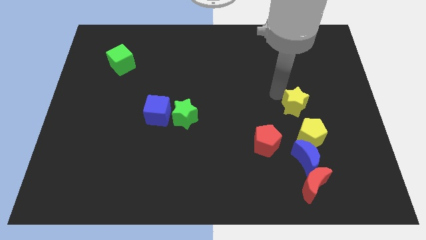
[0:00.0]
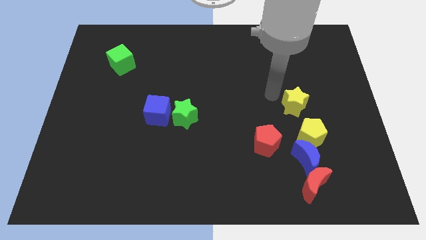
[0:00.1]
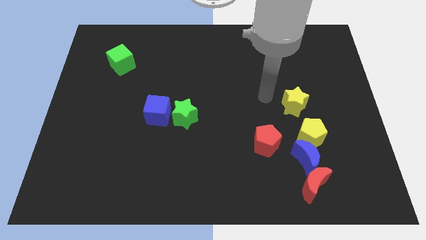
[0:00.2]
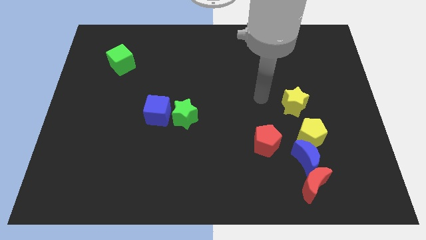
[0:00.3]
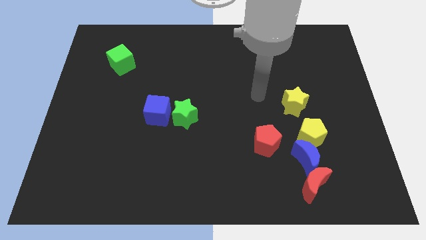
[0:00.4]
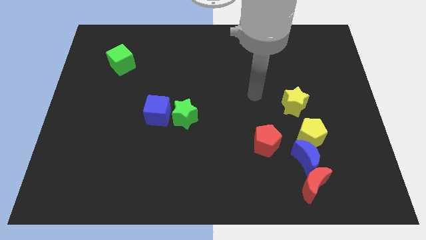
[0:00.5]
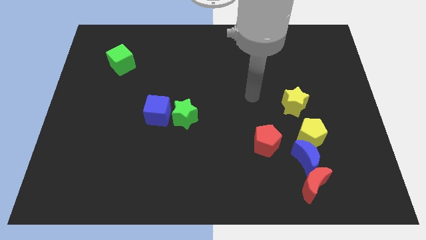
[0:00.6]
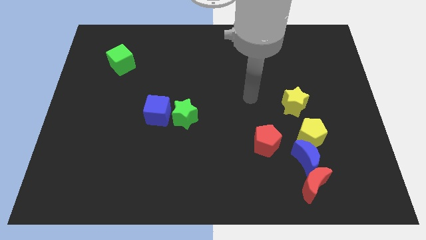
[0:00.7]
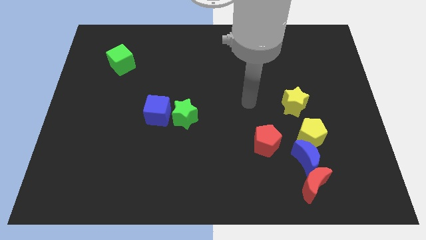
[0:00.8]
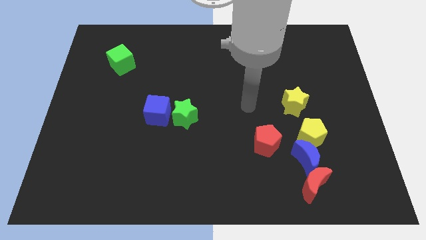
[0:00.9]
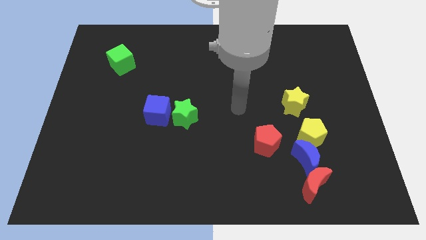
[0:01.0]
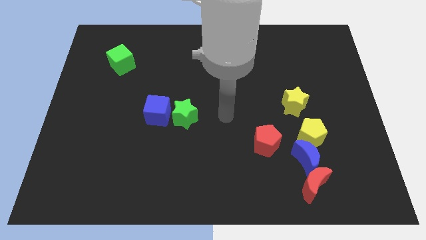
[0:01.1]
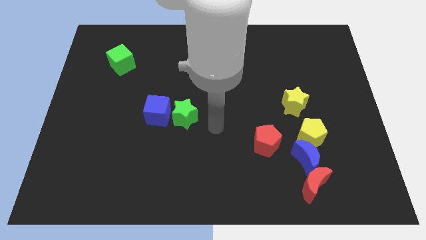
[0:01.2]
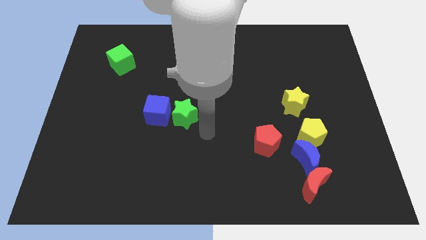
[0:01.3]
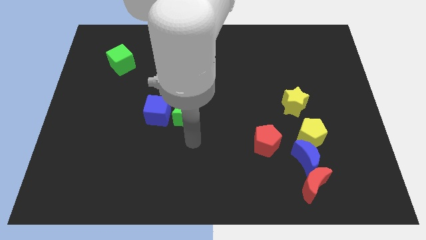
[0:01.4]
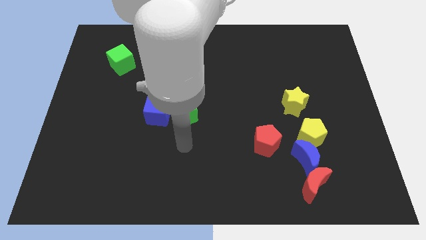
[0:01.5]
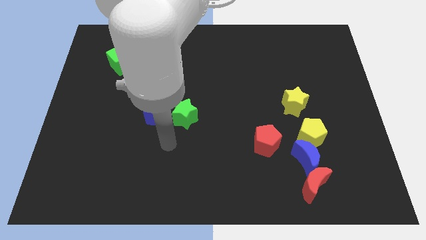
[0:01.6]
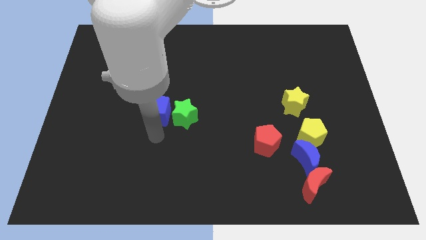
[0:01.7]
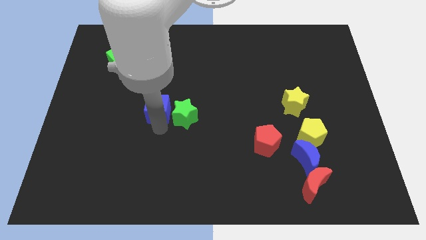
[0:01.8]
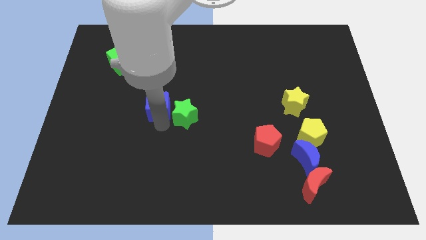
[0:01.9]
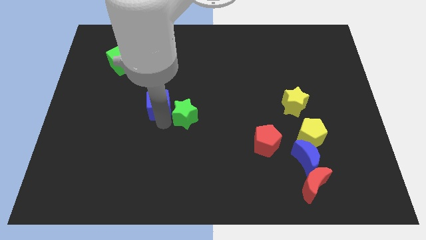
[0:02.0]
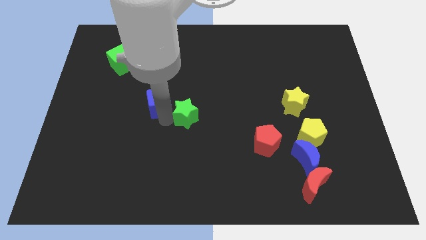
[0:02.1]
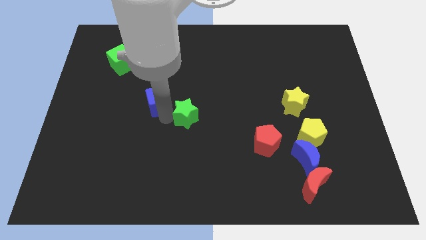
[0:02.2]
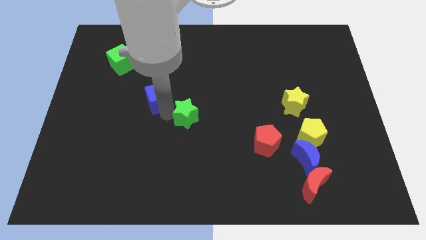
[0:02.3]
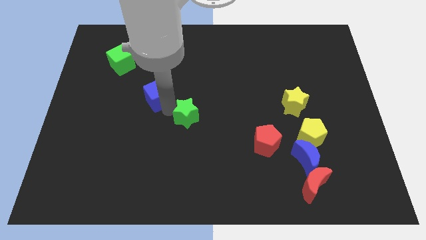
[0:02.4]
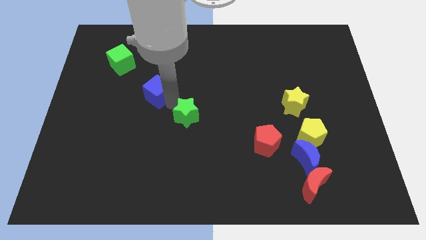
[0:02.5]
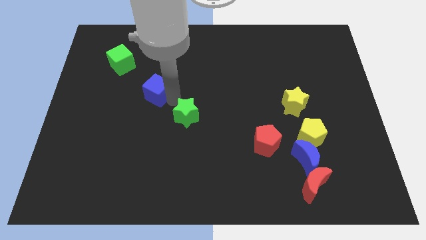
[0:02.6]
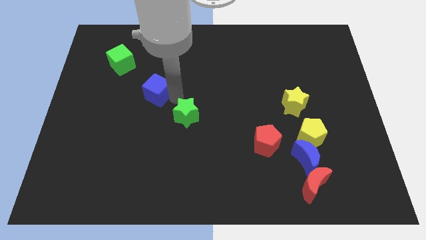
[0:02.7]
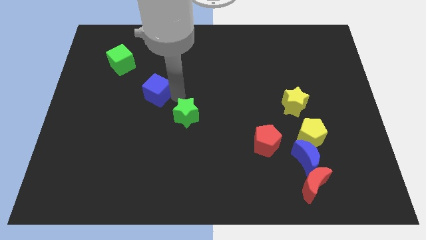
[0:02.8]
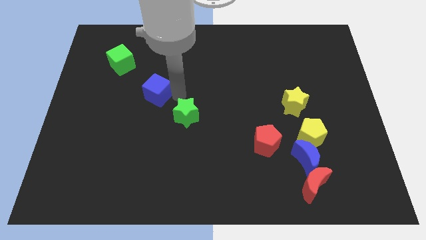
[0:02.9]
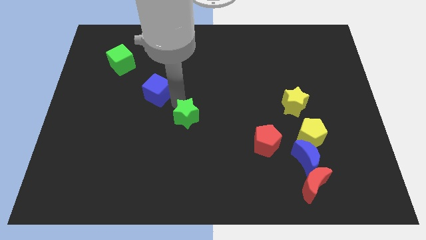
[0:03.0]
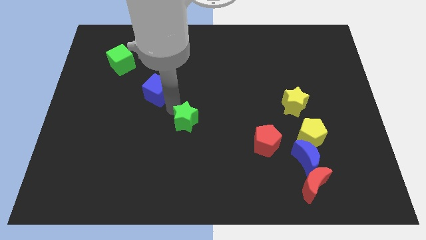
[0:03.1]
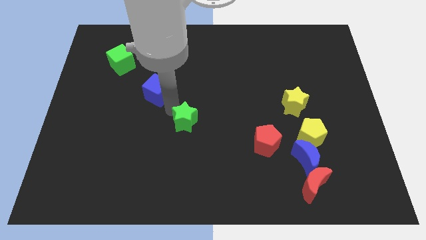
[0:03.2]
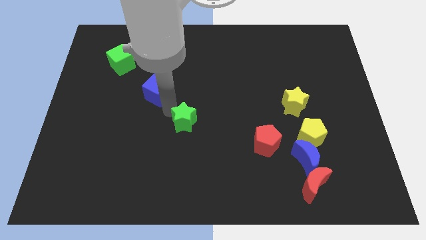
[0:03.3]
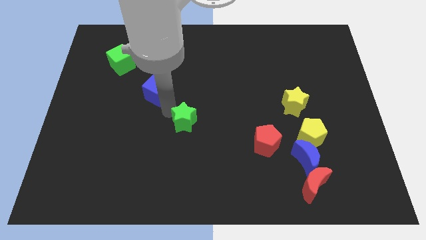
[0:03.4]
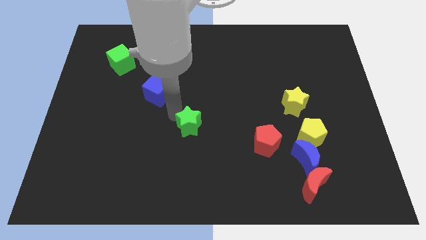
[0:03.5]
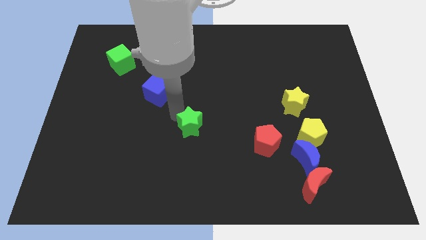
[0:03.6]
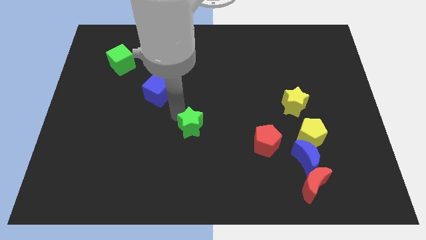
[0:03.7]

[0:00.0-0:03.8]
place the blue cube and green star diagonally to the green cube

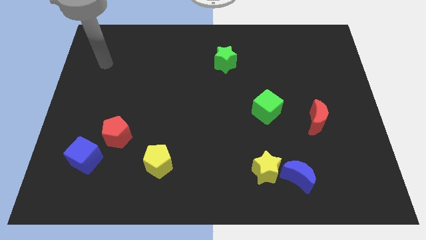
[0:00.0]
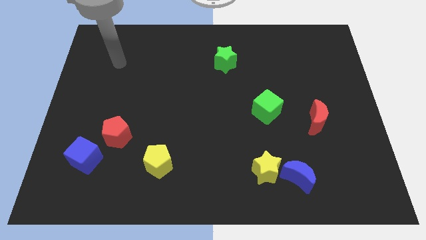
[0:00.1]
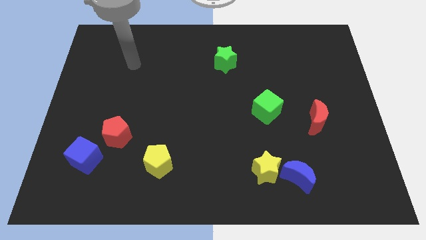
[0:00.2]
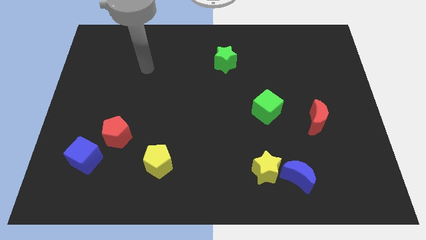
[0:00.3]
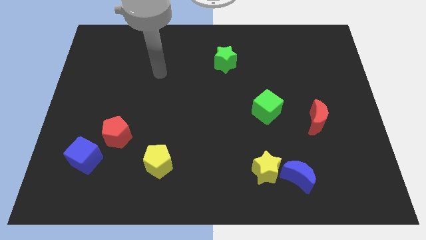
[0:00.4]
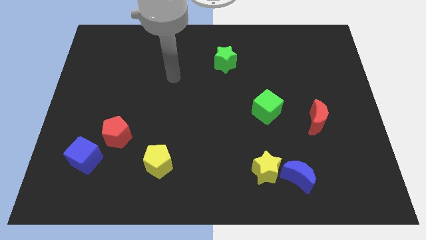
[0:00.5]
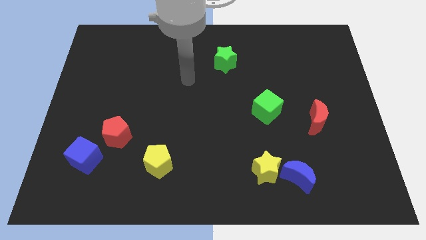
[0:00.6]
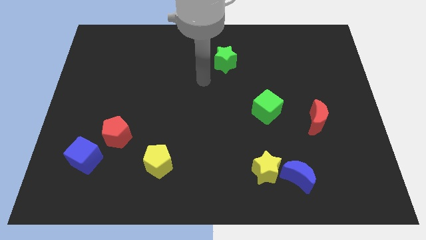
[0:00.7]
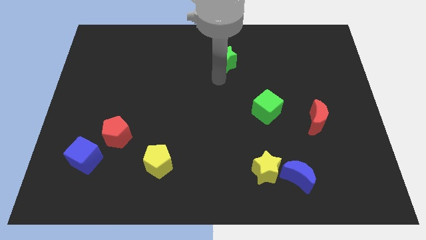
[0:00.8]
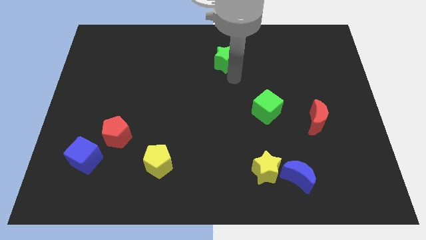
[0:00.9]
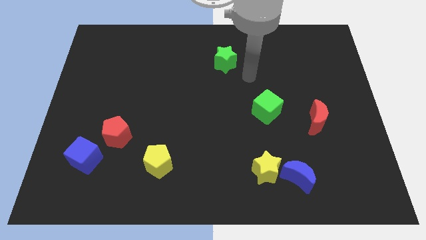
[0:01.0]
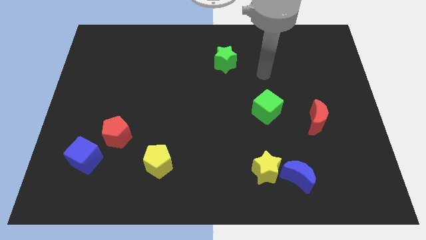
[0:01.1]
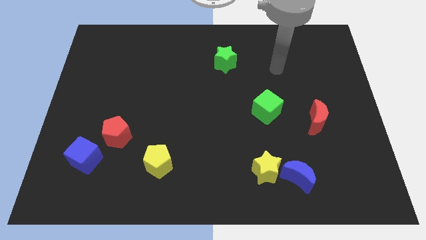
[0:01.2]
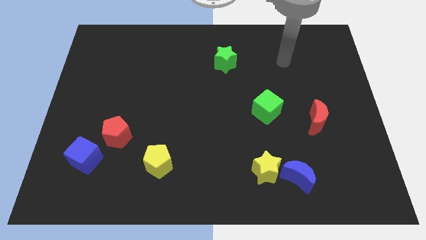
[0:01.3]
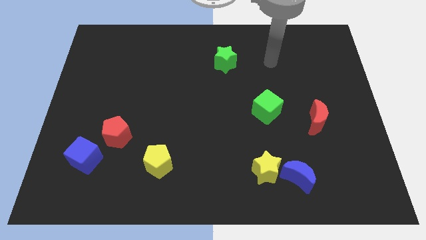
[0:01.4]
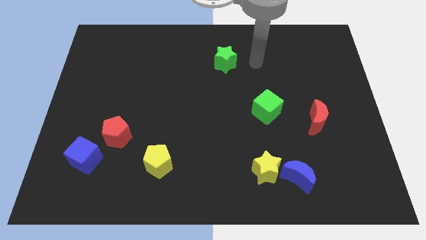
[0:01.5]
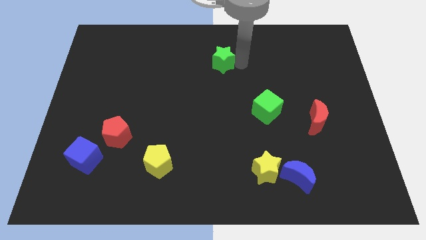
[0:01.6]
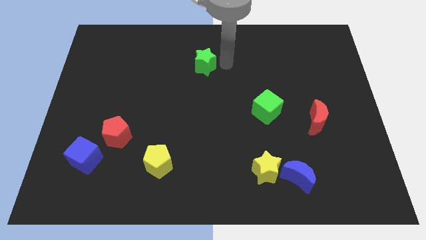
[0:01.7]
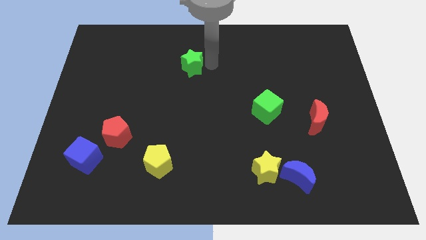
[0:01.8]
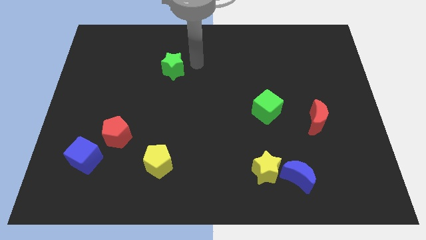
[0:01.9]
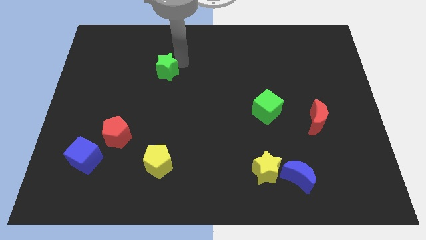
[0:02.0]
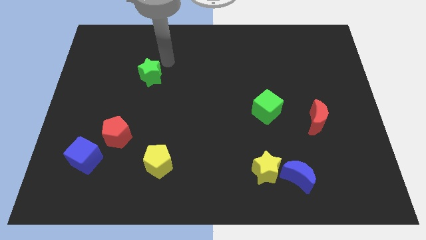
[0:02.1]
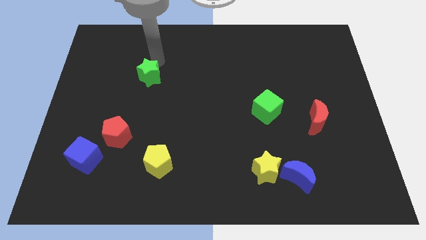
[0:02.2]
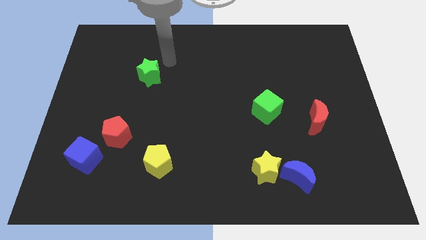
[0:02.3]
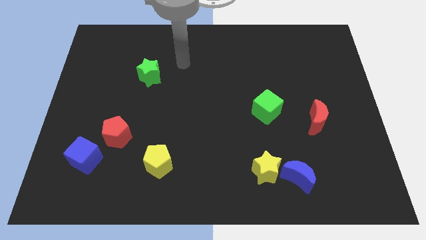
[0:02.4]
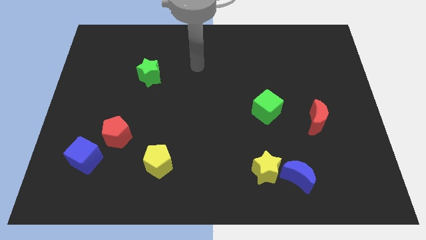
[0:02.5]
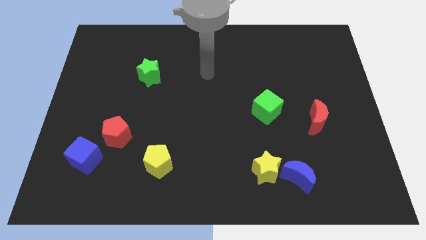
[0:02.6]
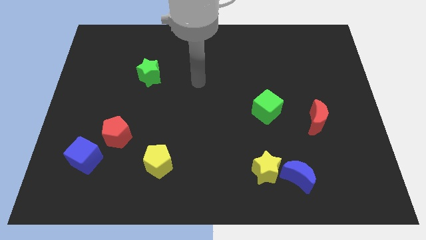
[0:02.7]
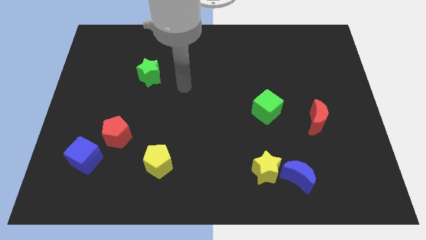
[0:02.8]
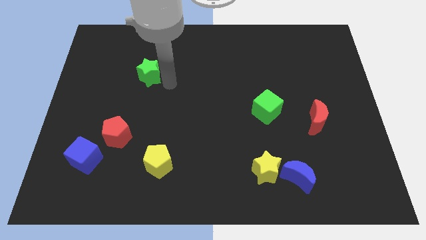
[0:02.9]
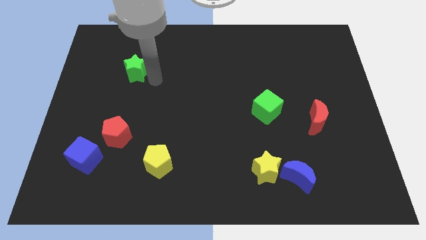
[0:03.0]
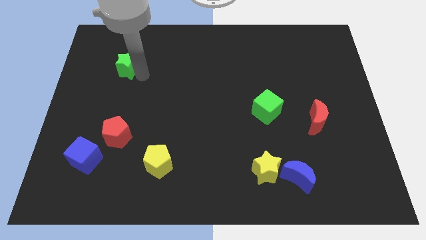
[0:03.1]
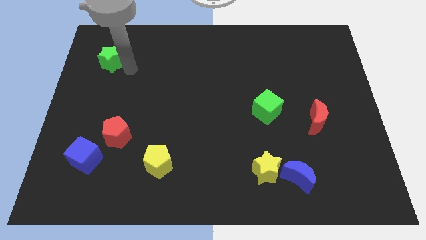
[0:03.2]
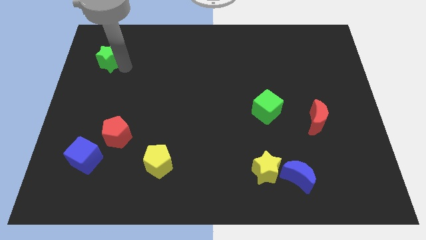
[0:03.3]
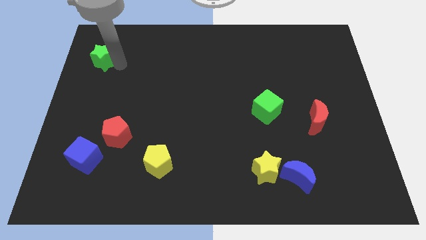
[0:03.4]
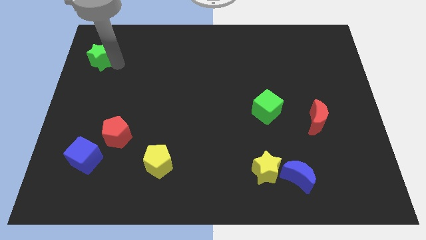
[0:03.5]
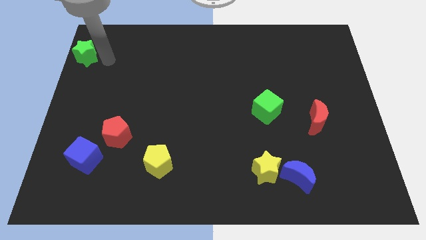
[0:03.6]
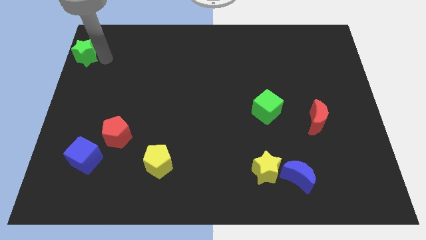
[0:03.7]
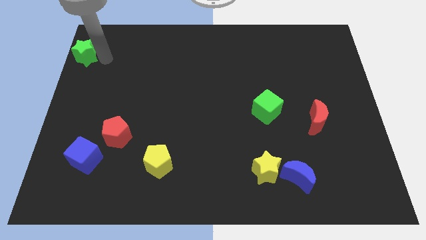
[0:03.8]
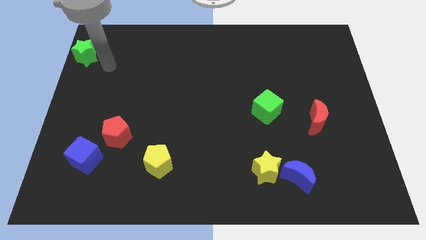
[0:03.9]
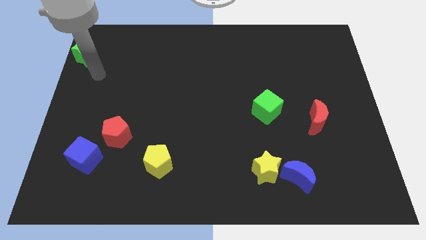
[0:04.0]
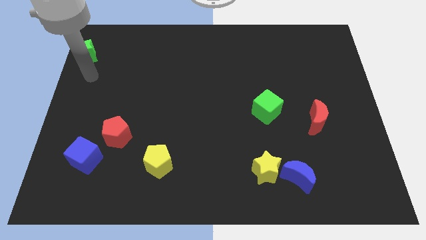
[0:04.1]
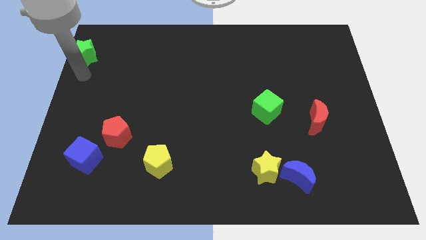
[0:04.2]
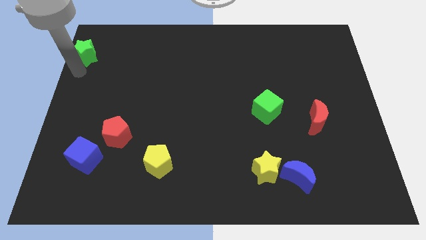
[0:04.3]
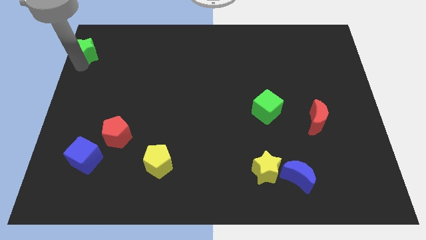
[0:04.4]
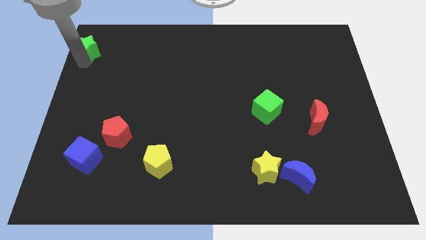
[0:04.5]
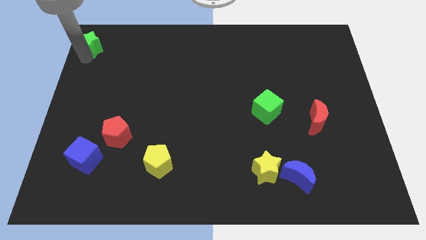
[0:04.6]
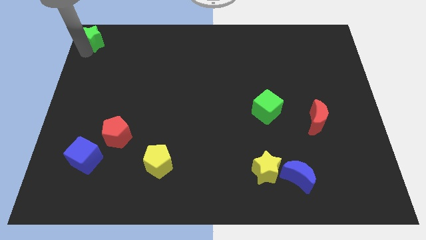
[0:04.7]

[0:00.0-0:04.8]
place green star to the top left corner of the board

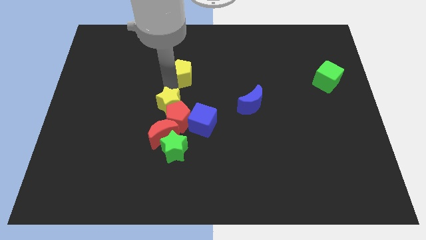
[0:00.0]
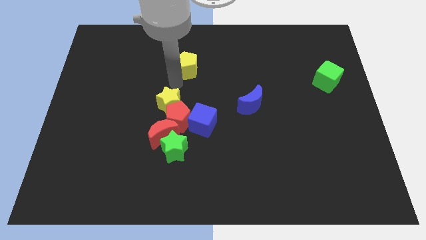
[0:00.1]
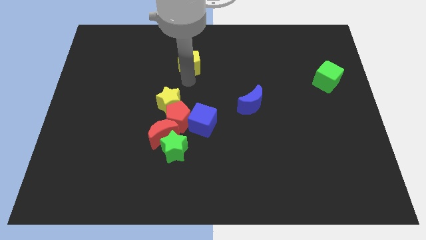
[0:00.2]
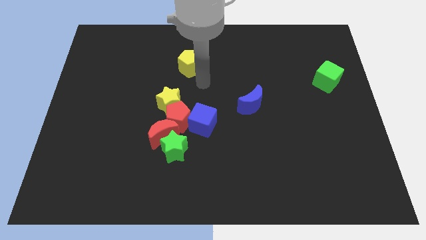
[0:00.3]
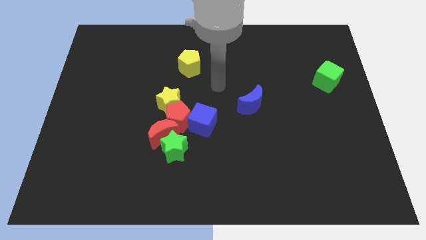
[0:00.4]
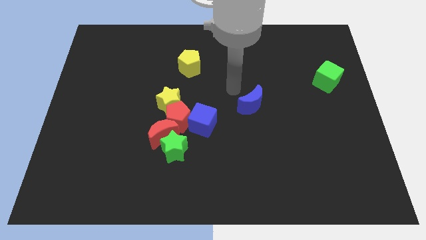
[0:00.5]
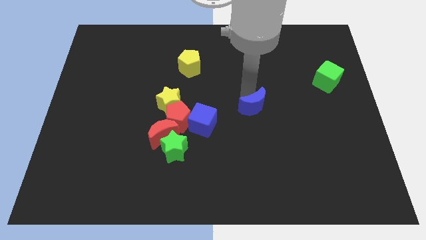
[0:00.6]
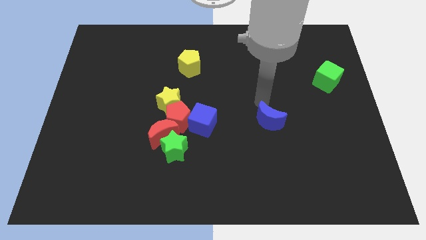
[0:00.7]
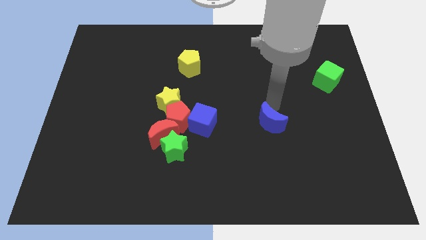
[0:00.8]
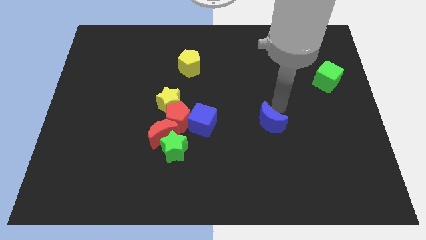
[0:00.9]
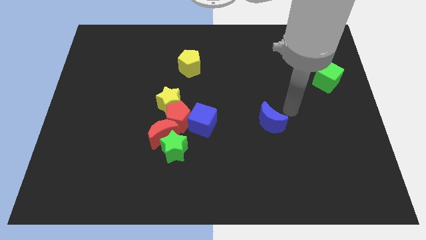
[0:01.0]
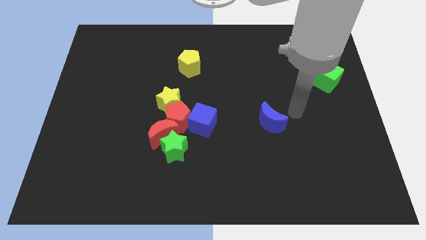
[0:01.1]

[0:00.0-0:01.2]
place blue moon parallel right to blue cube
